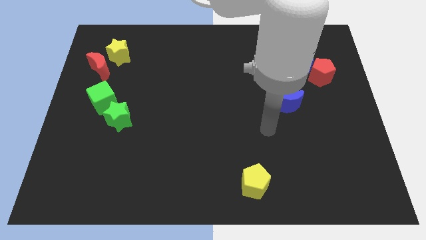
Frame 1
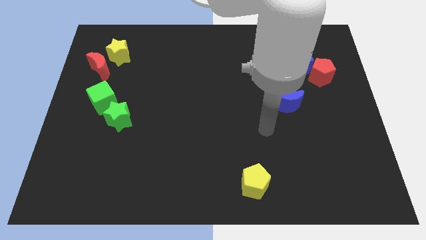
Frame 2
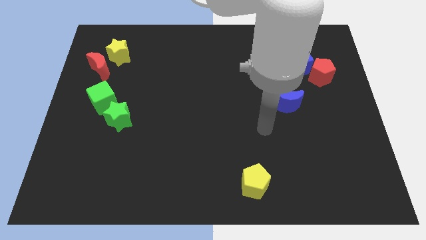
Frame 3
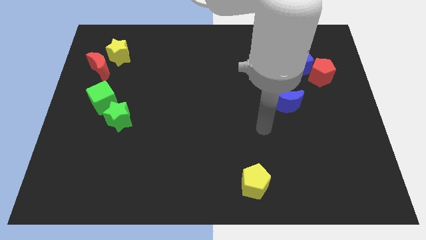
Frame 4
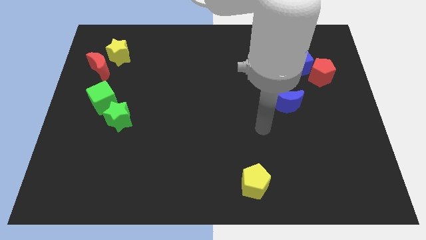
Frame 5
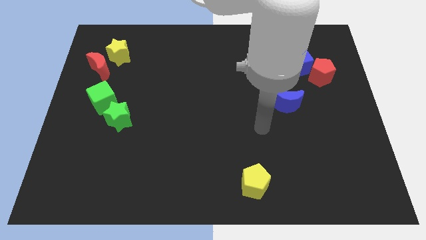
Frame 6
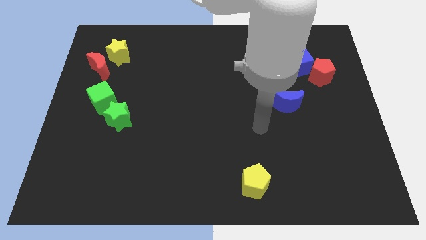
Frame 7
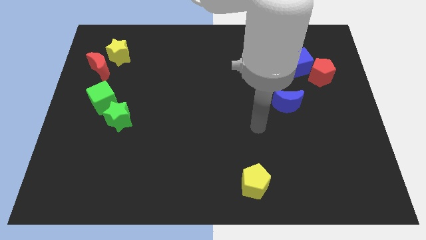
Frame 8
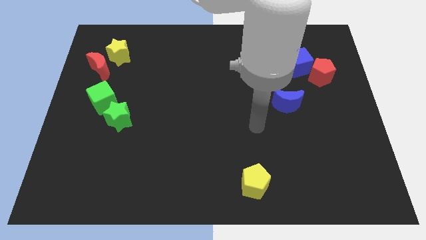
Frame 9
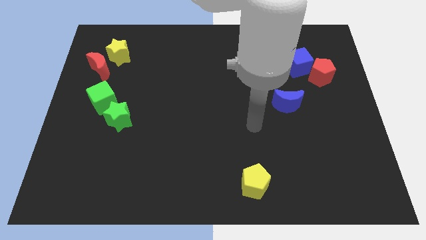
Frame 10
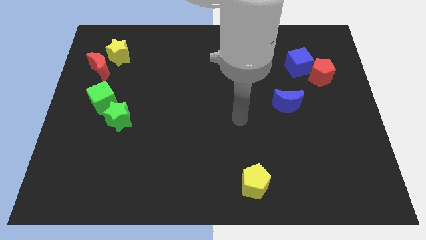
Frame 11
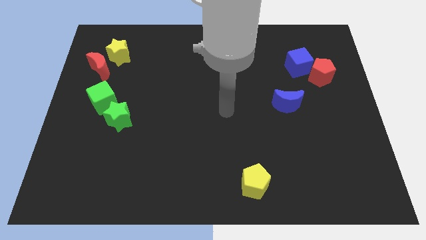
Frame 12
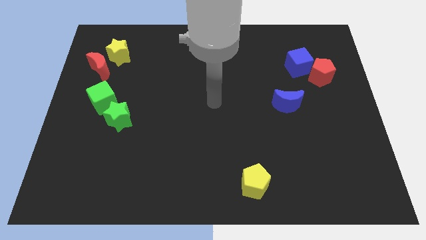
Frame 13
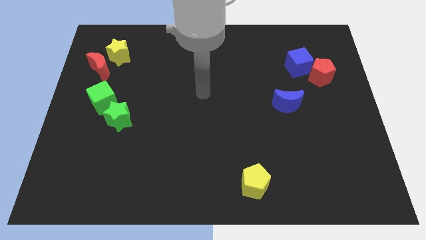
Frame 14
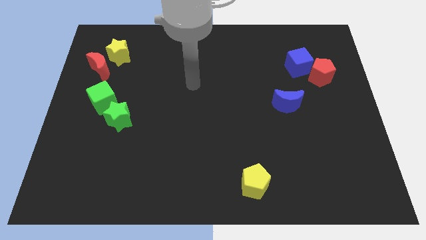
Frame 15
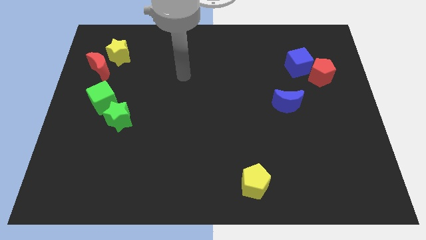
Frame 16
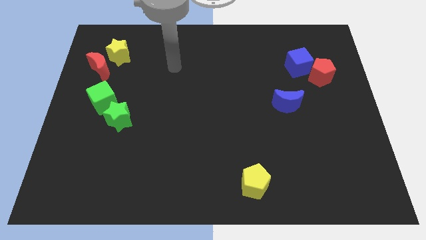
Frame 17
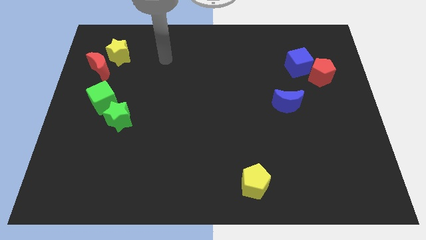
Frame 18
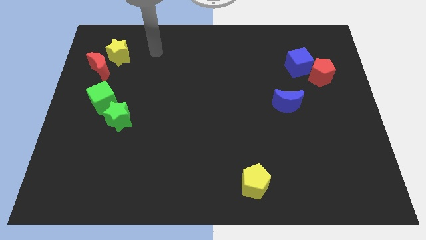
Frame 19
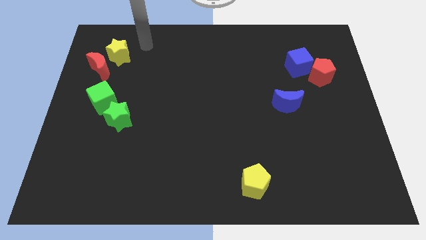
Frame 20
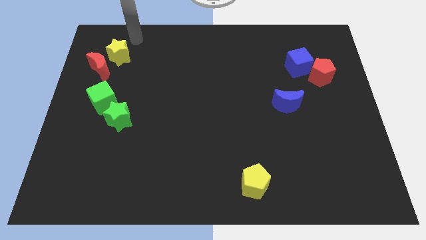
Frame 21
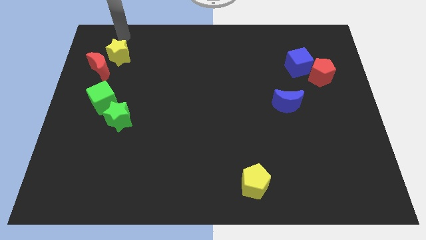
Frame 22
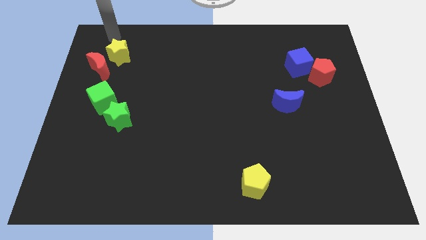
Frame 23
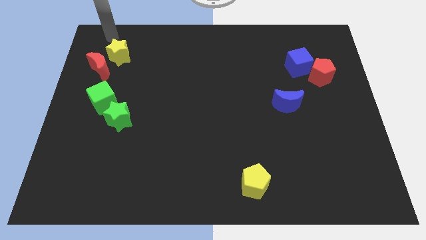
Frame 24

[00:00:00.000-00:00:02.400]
place your arm above the yellow star

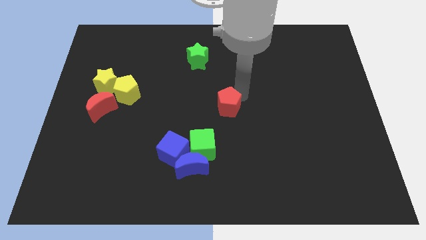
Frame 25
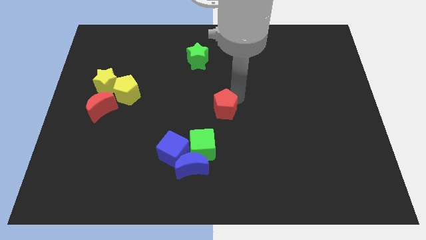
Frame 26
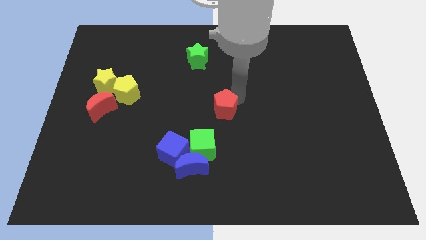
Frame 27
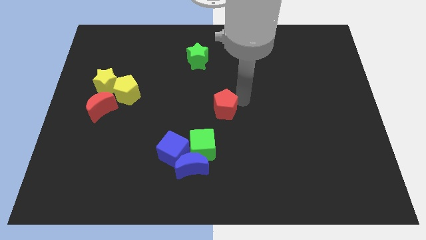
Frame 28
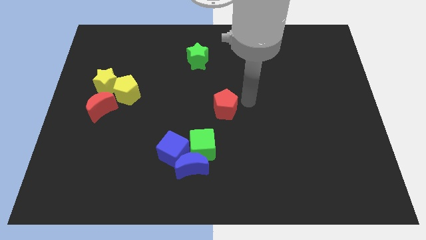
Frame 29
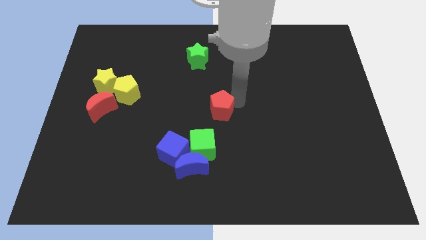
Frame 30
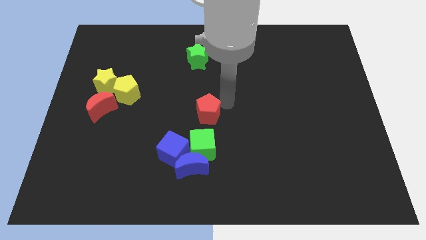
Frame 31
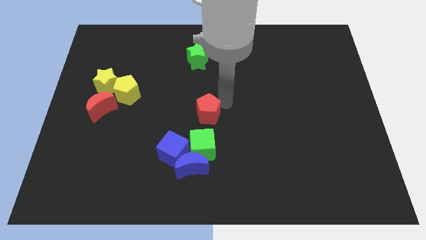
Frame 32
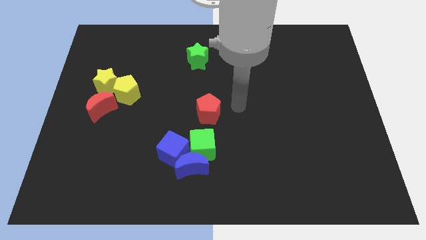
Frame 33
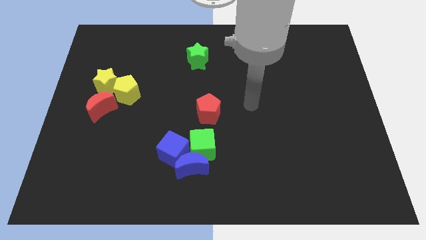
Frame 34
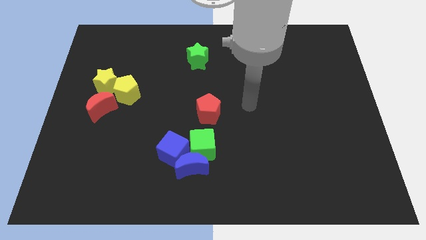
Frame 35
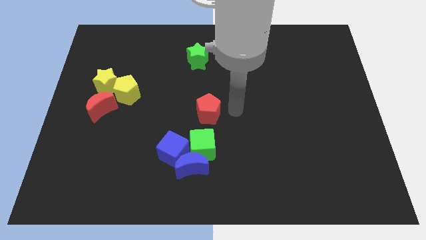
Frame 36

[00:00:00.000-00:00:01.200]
move the red crescent to the center of the board

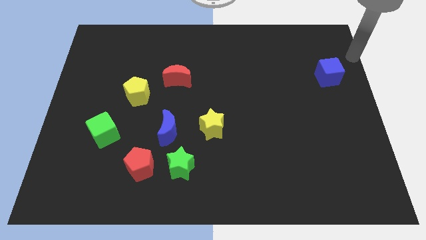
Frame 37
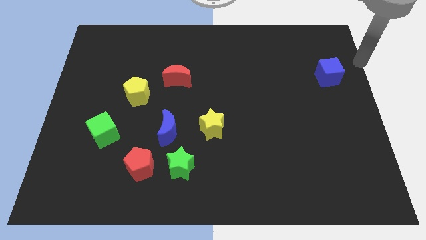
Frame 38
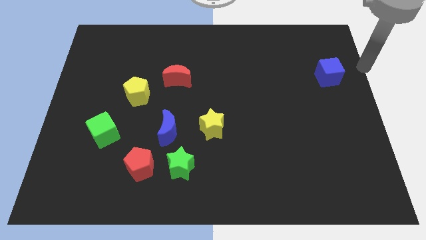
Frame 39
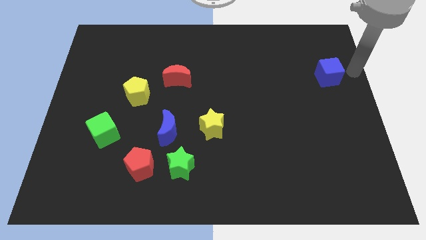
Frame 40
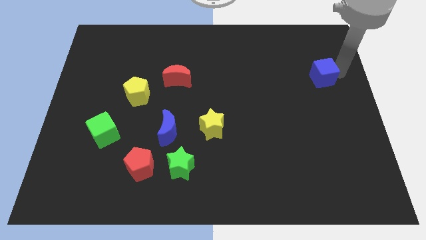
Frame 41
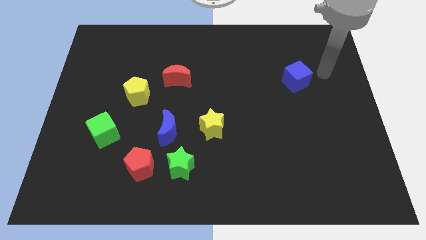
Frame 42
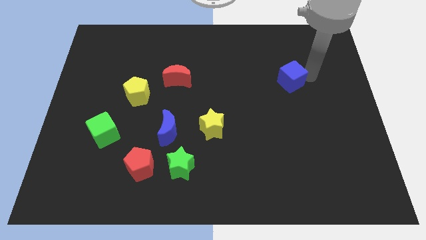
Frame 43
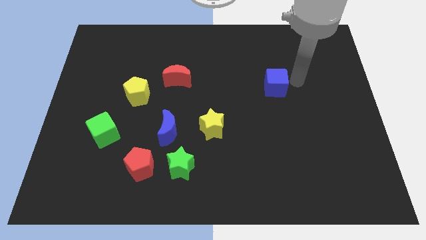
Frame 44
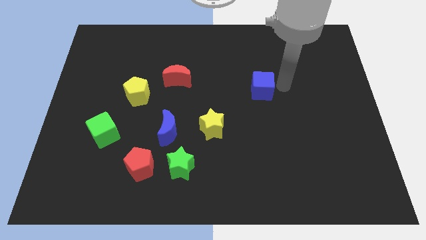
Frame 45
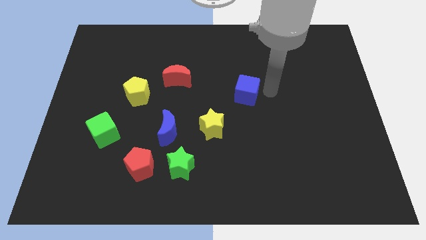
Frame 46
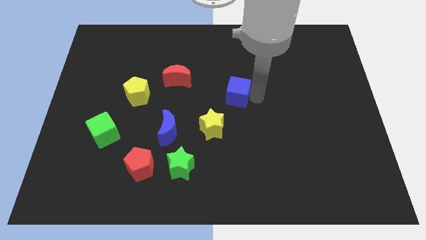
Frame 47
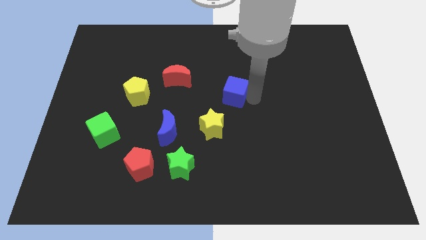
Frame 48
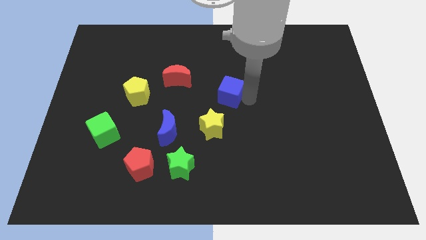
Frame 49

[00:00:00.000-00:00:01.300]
push the blue cube to the center of the board

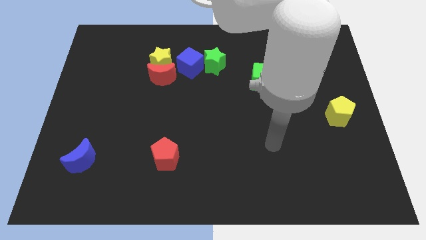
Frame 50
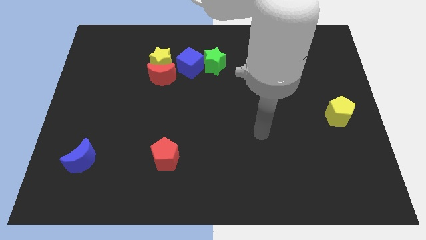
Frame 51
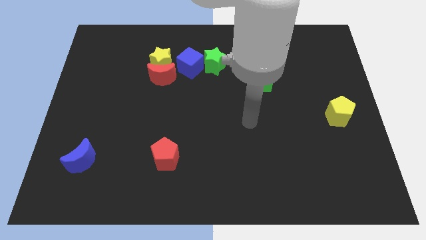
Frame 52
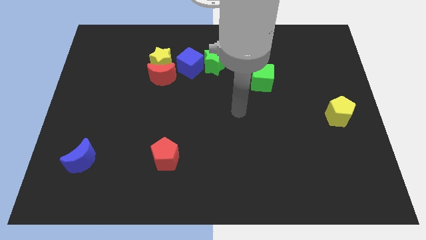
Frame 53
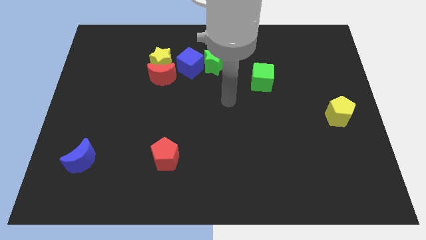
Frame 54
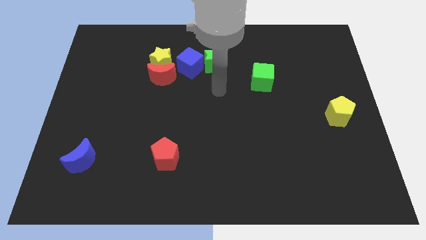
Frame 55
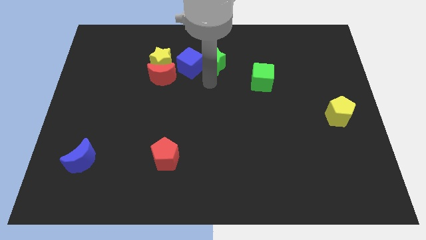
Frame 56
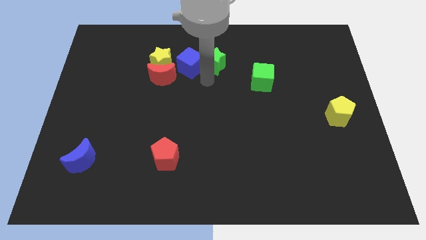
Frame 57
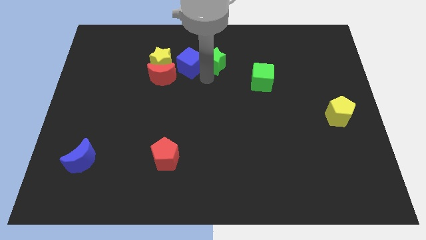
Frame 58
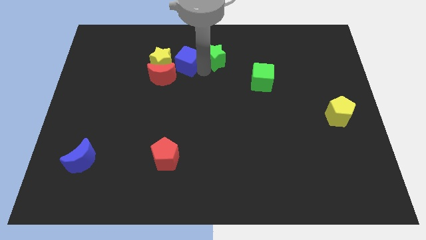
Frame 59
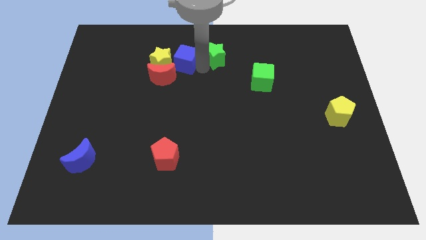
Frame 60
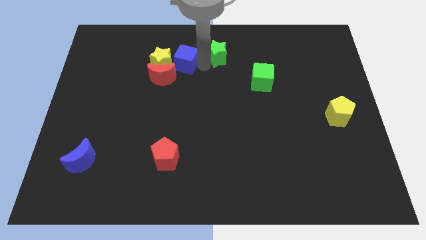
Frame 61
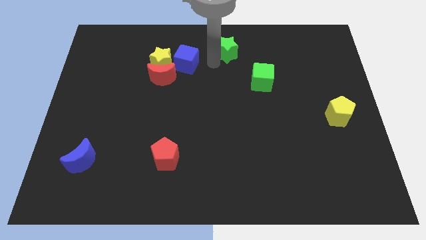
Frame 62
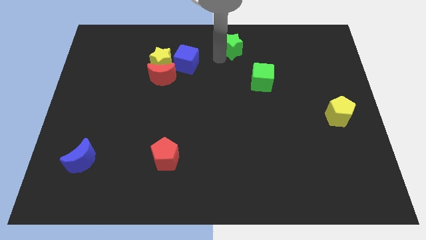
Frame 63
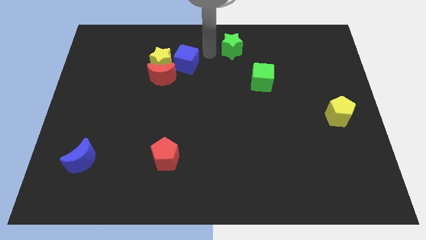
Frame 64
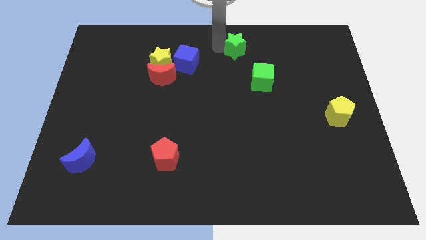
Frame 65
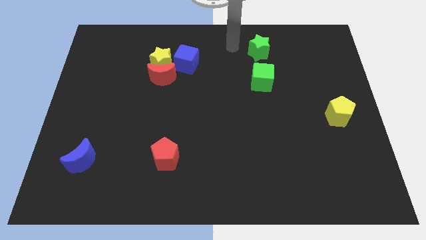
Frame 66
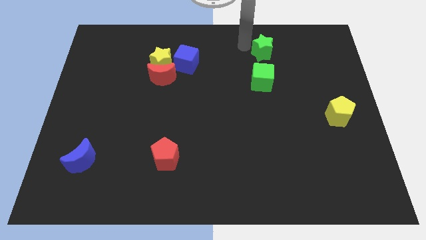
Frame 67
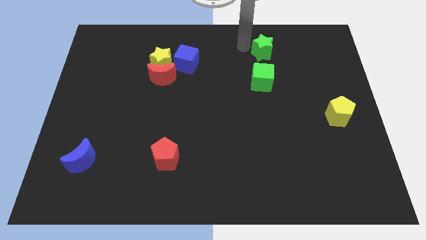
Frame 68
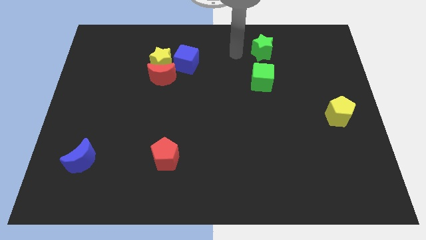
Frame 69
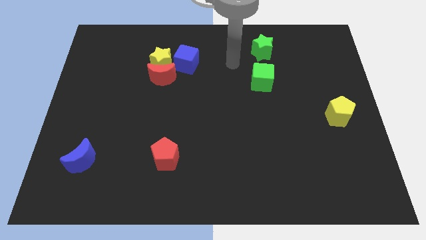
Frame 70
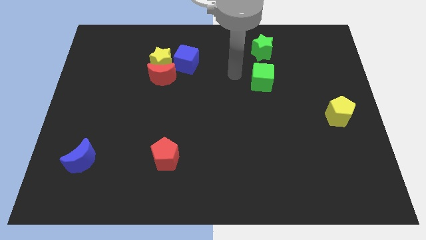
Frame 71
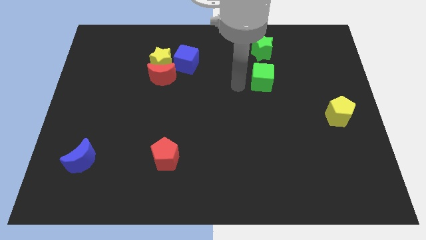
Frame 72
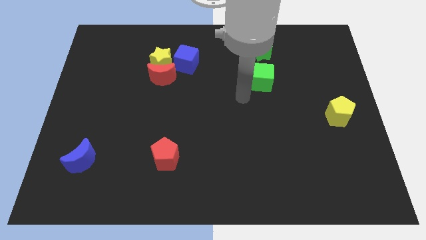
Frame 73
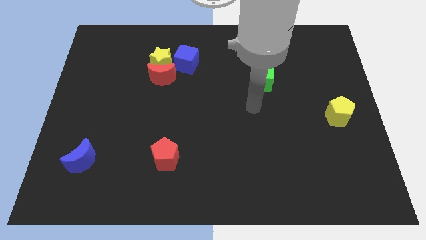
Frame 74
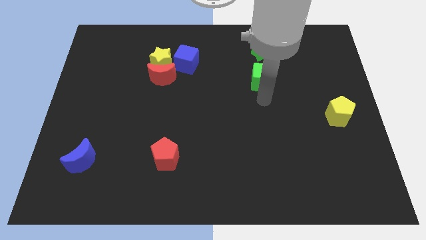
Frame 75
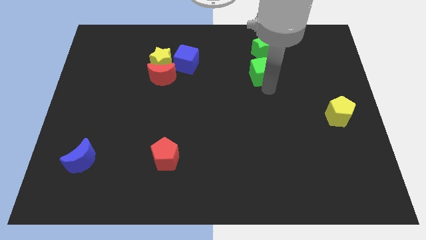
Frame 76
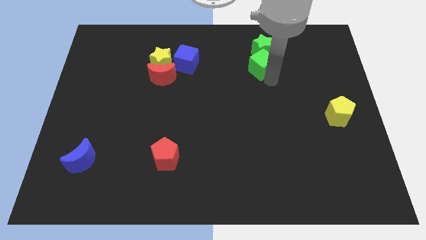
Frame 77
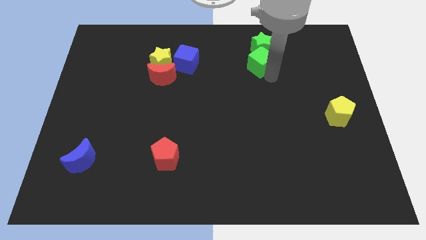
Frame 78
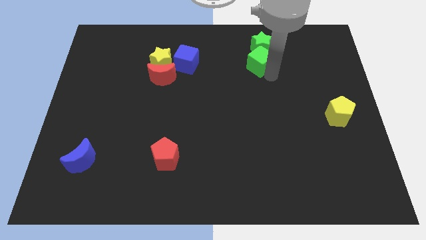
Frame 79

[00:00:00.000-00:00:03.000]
place the green star at the top of the green cube

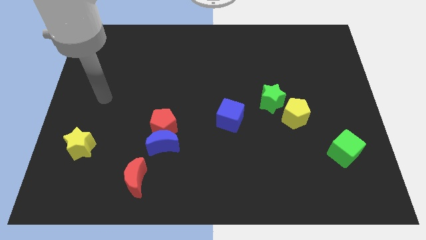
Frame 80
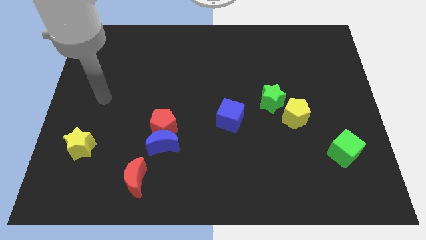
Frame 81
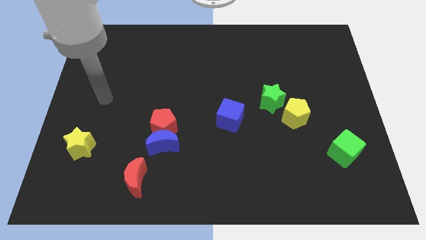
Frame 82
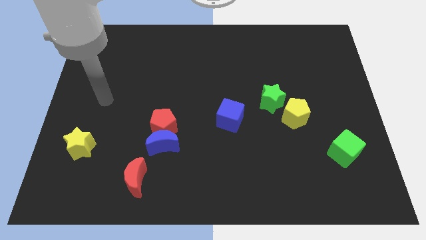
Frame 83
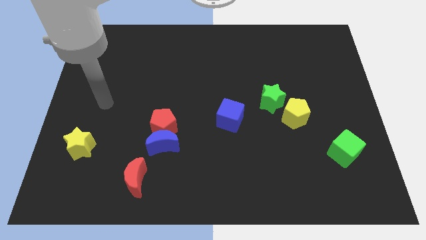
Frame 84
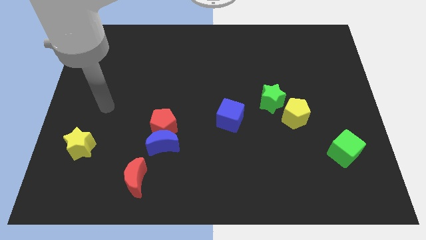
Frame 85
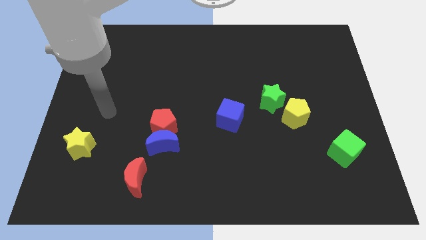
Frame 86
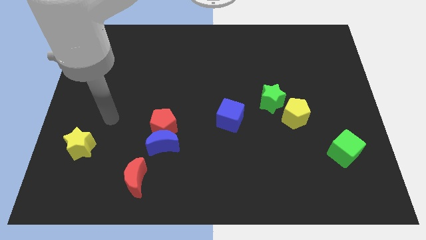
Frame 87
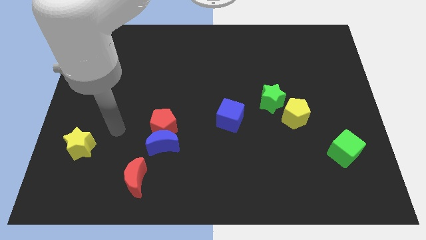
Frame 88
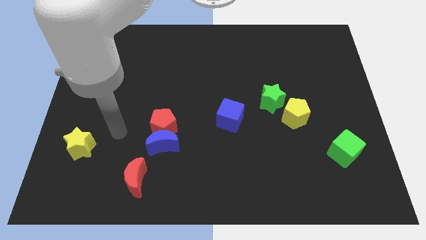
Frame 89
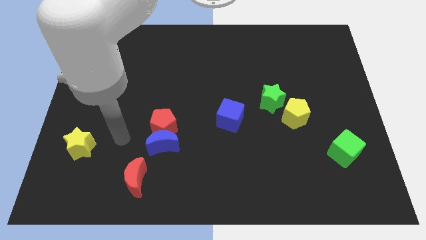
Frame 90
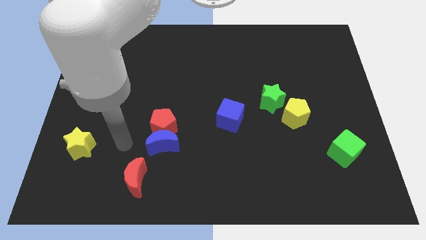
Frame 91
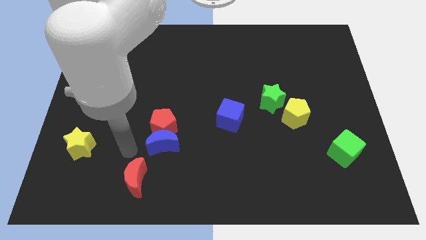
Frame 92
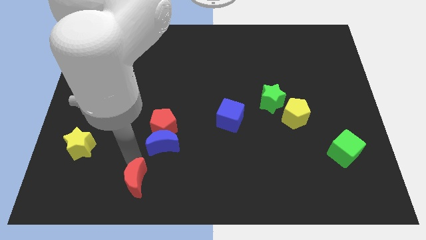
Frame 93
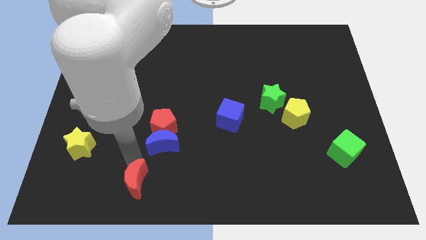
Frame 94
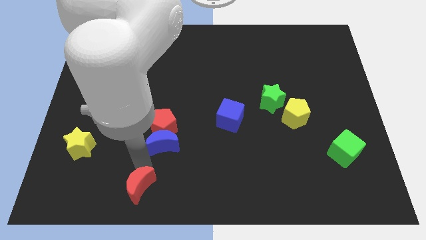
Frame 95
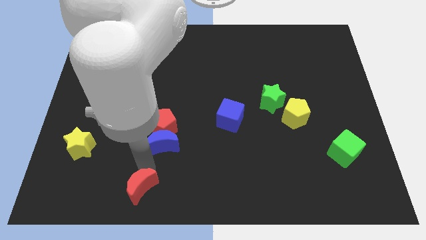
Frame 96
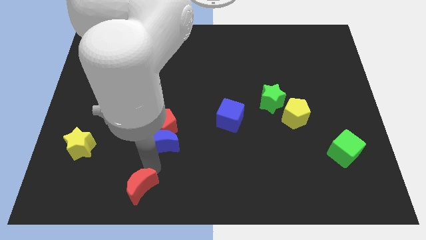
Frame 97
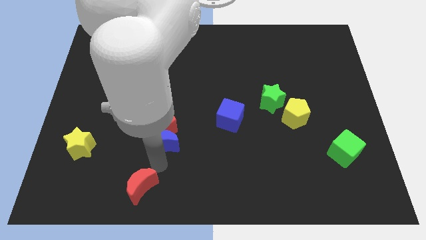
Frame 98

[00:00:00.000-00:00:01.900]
rotate the red crescent to the right side
